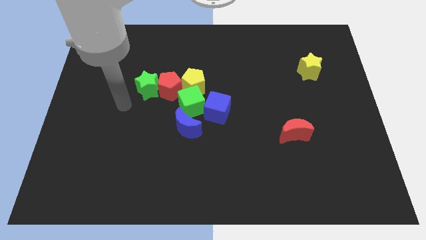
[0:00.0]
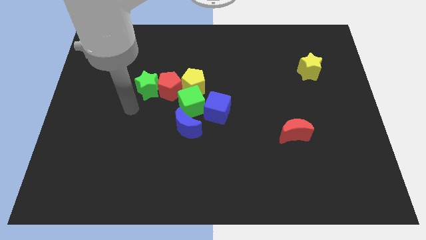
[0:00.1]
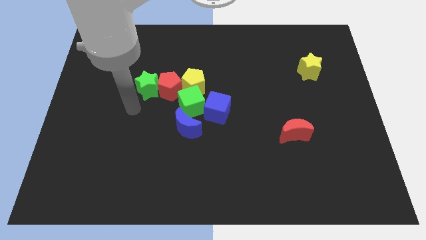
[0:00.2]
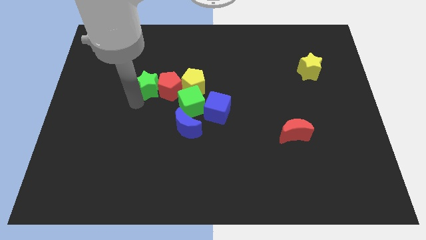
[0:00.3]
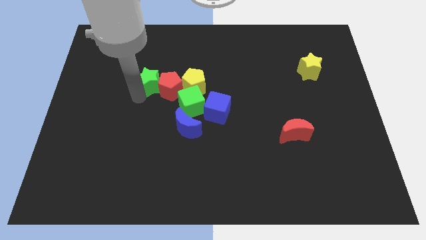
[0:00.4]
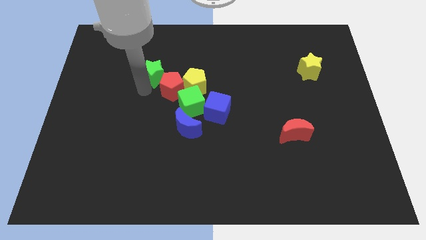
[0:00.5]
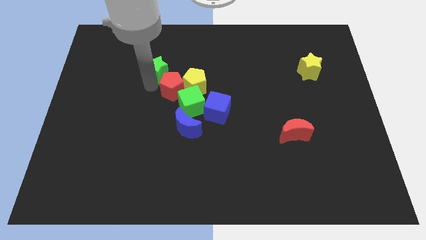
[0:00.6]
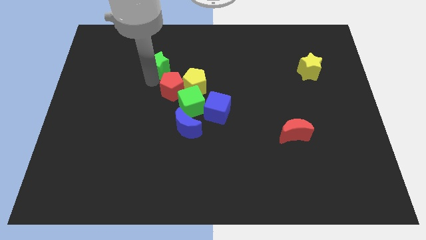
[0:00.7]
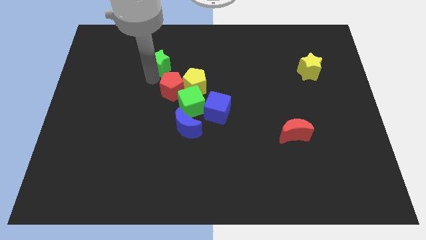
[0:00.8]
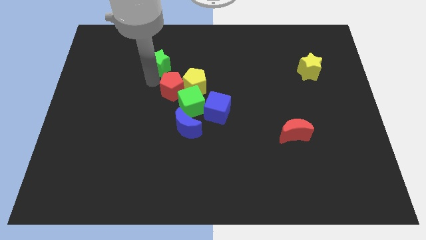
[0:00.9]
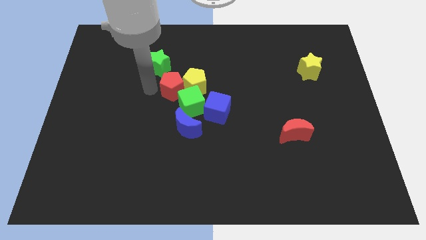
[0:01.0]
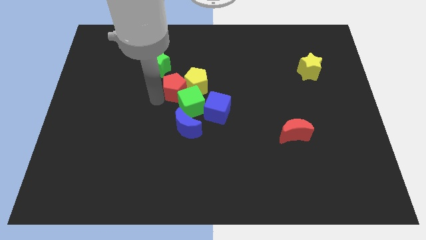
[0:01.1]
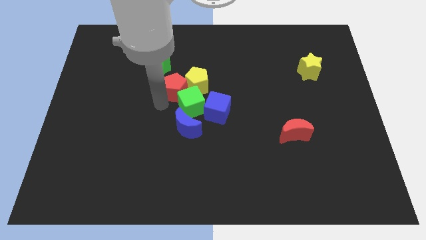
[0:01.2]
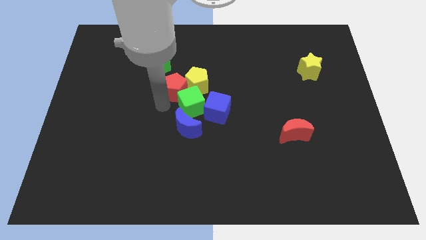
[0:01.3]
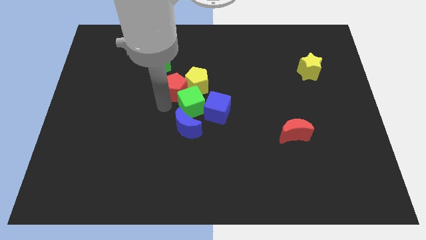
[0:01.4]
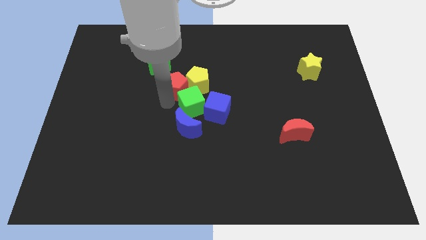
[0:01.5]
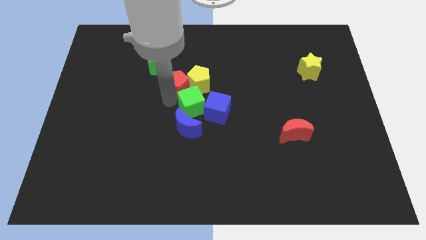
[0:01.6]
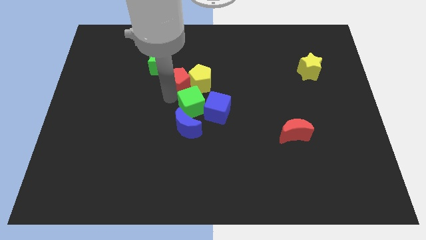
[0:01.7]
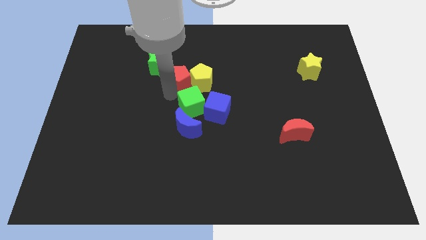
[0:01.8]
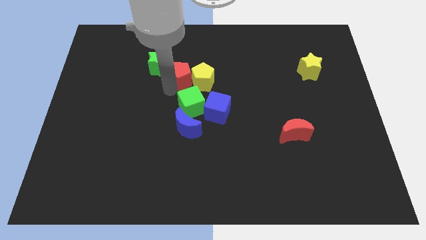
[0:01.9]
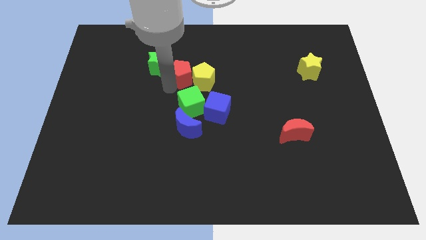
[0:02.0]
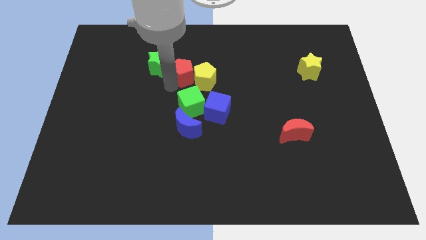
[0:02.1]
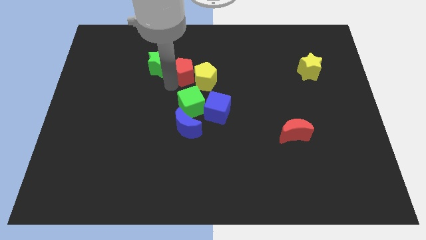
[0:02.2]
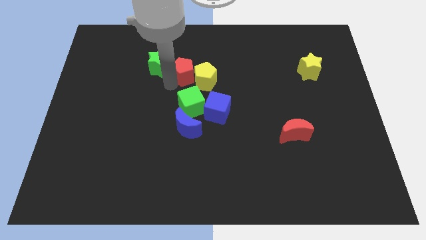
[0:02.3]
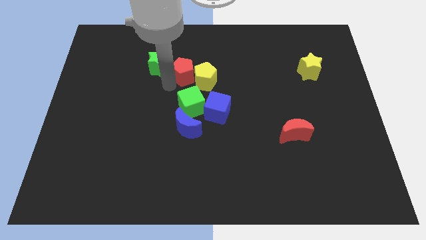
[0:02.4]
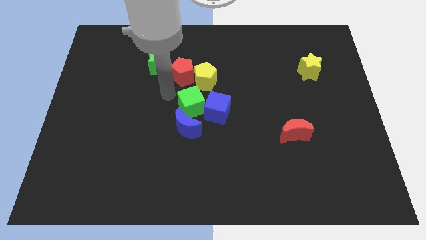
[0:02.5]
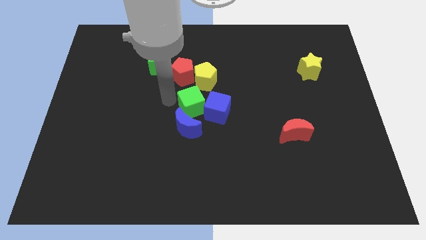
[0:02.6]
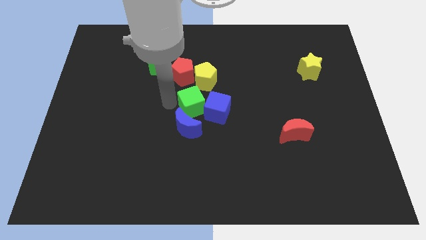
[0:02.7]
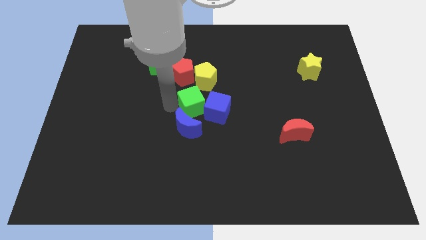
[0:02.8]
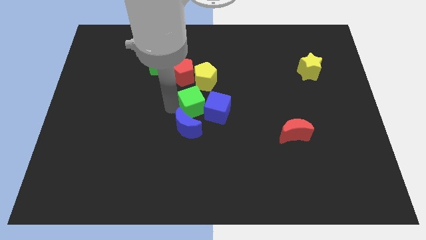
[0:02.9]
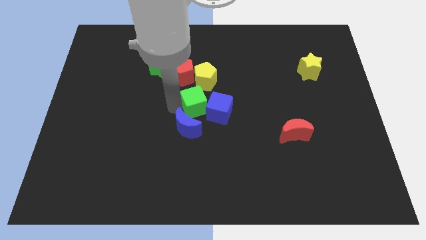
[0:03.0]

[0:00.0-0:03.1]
move the green star and red pentagon up slightly

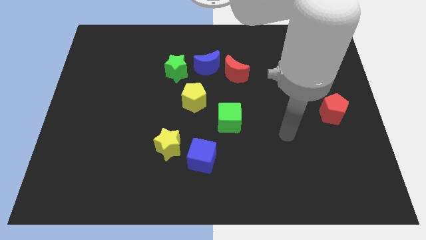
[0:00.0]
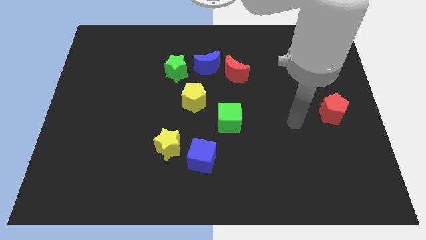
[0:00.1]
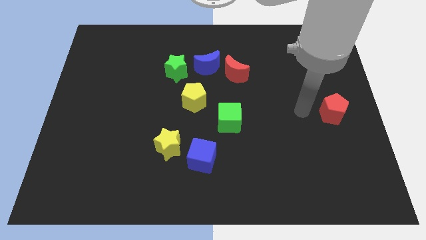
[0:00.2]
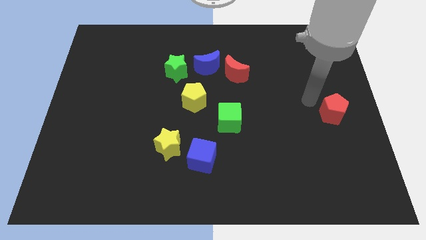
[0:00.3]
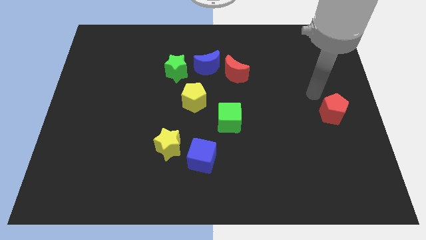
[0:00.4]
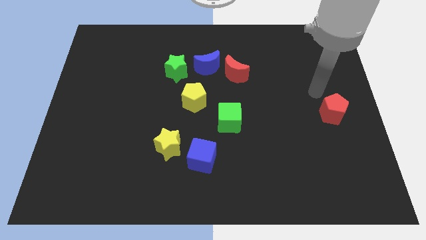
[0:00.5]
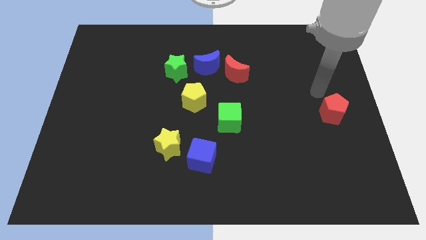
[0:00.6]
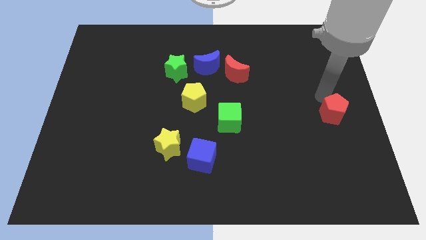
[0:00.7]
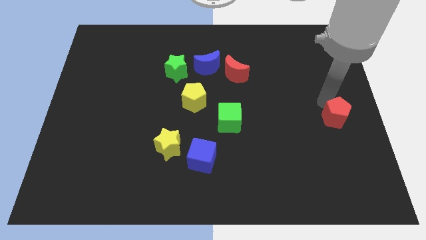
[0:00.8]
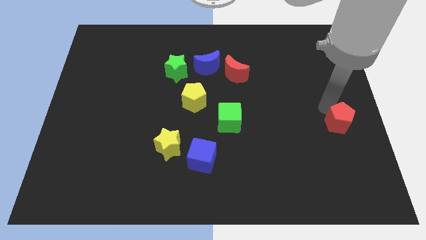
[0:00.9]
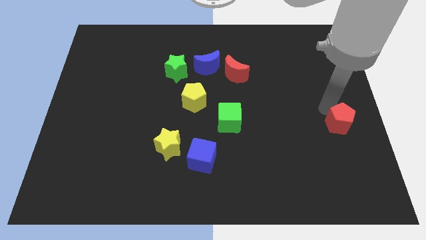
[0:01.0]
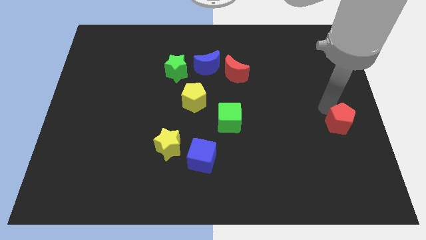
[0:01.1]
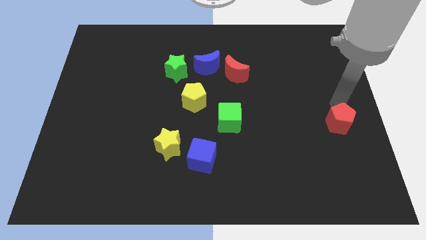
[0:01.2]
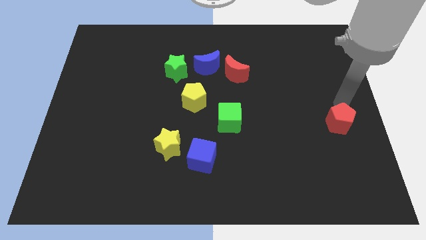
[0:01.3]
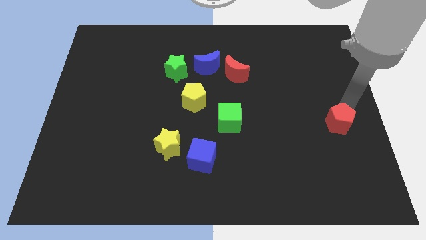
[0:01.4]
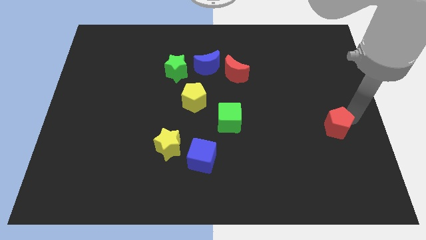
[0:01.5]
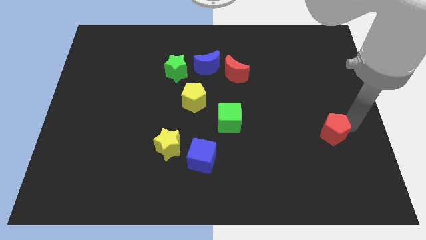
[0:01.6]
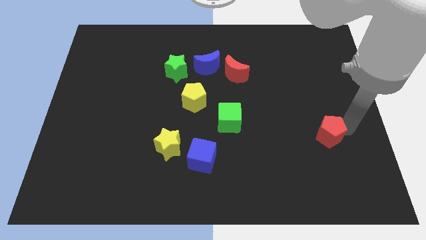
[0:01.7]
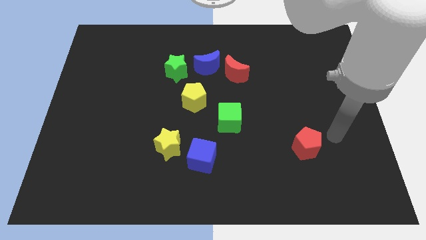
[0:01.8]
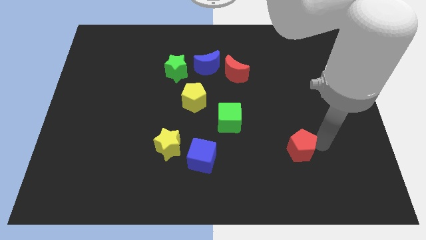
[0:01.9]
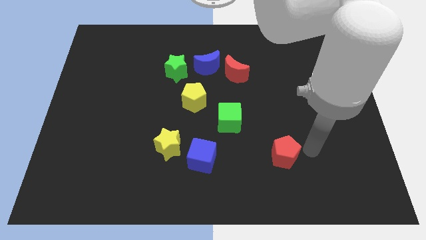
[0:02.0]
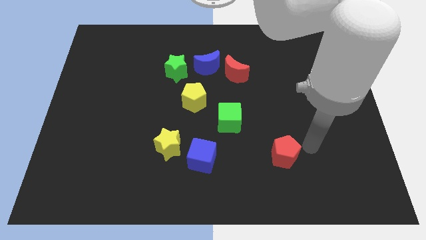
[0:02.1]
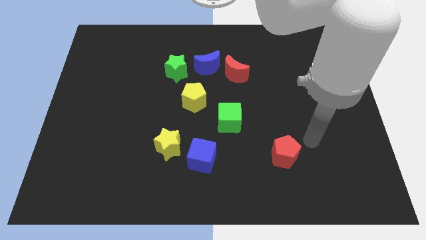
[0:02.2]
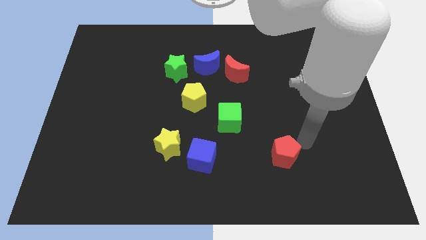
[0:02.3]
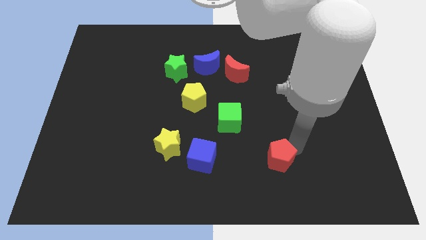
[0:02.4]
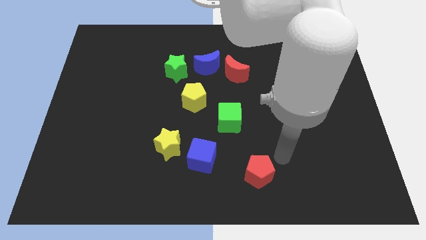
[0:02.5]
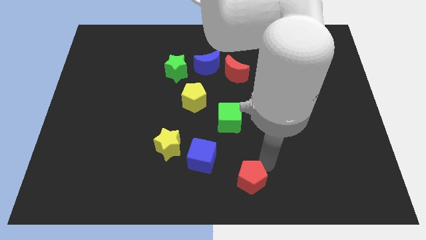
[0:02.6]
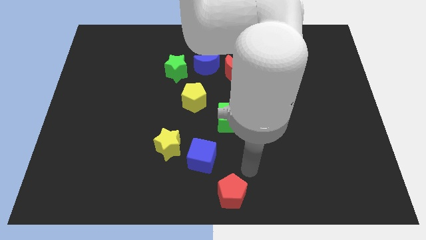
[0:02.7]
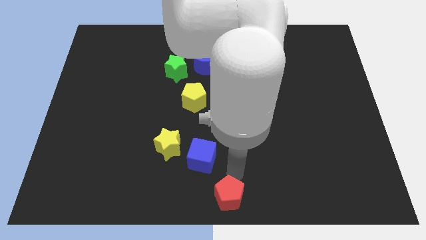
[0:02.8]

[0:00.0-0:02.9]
push the red pentagon to the bottom centre of the board

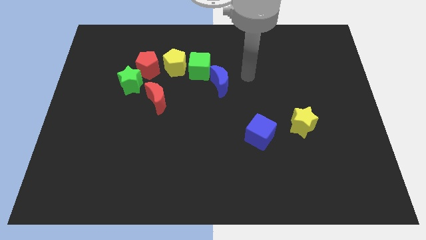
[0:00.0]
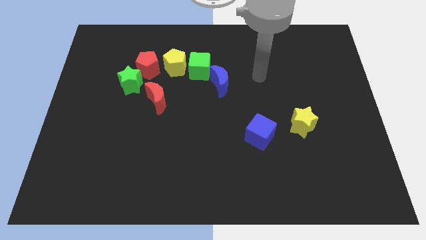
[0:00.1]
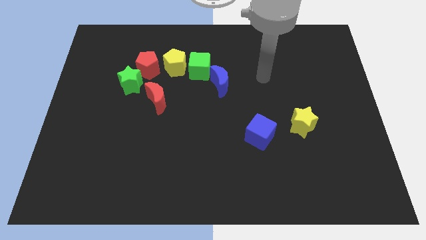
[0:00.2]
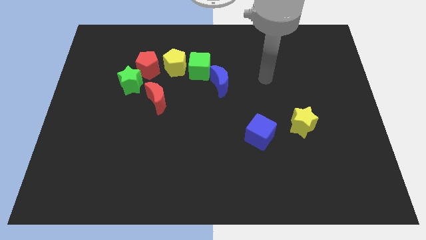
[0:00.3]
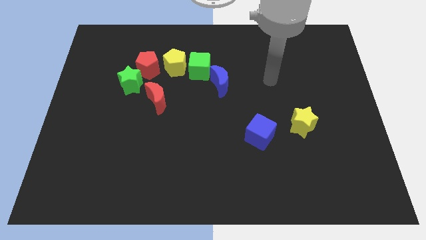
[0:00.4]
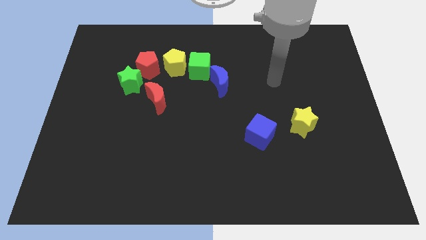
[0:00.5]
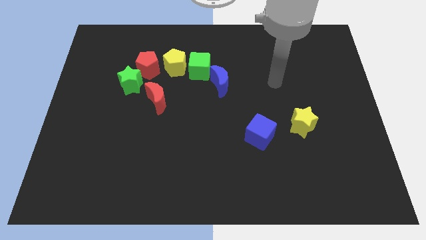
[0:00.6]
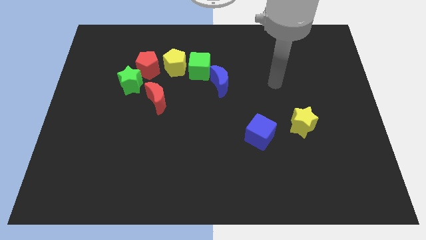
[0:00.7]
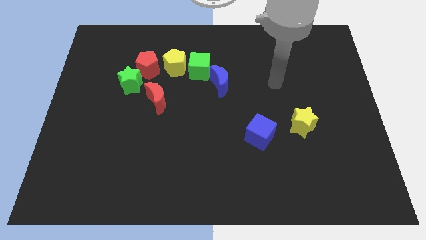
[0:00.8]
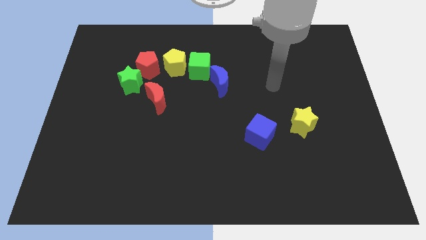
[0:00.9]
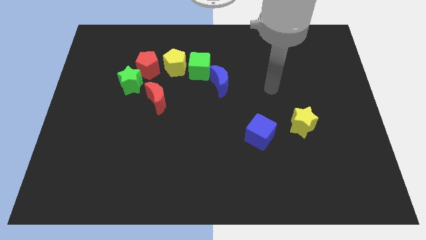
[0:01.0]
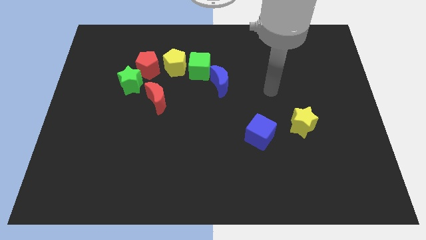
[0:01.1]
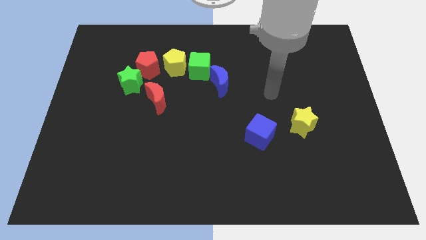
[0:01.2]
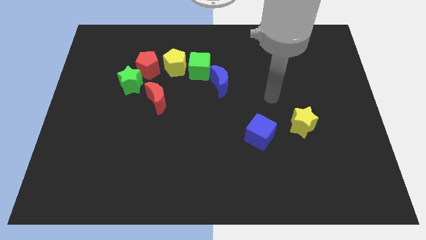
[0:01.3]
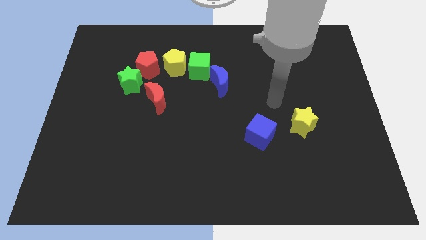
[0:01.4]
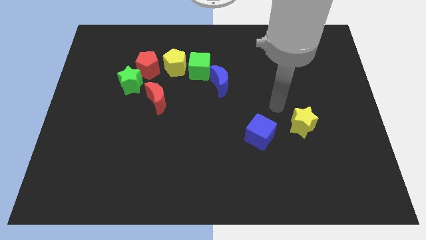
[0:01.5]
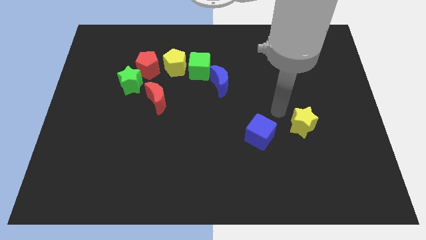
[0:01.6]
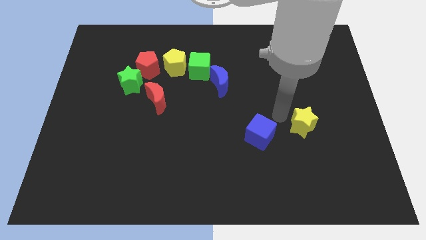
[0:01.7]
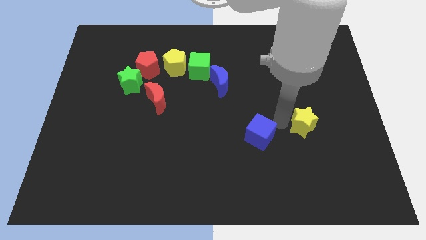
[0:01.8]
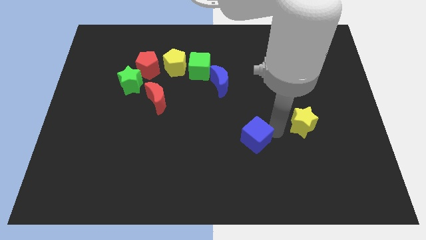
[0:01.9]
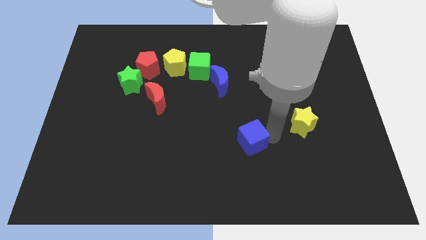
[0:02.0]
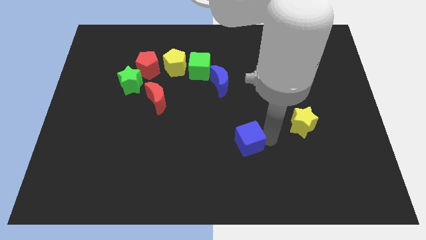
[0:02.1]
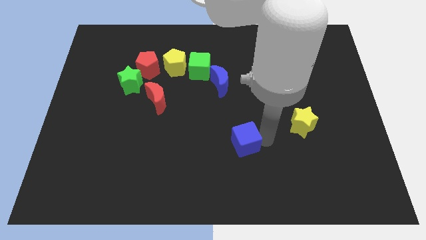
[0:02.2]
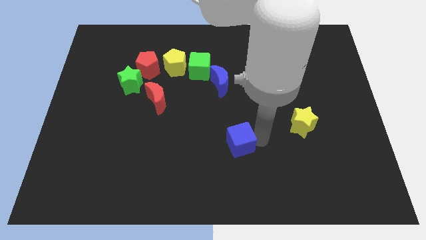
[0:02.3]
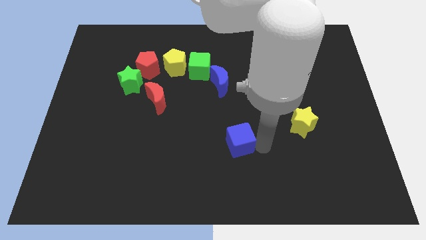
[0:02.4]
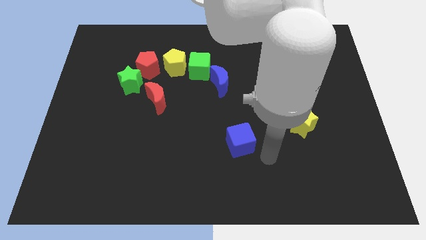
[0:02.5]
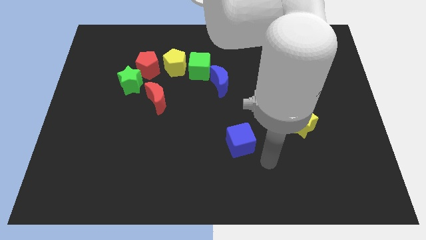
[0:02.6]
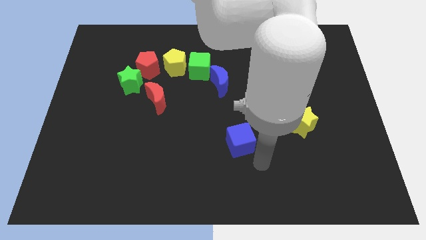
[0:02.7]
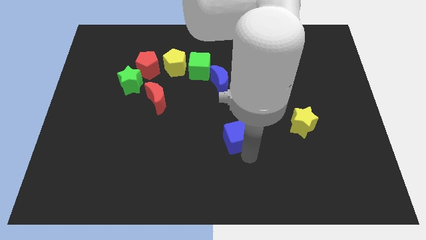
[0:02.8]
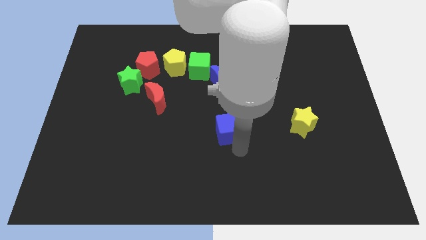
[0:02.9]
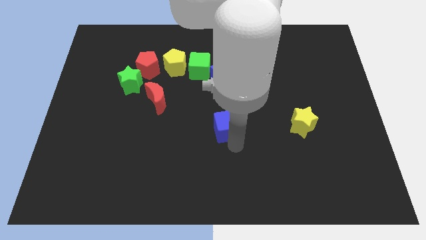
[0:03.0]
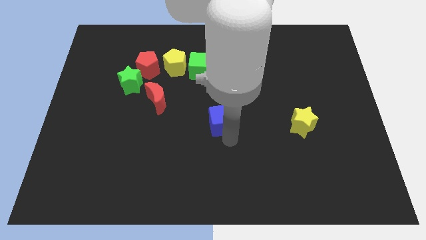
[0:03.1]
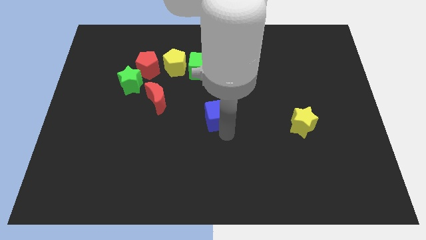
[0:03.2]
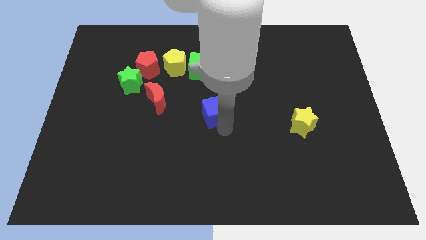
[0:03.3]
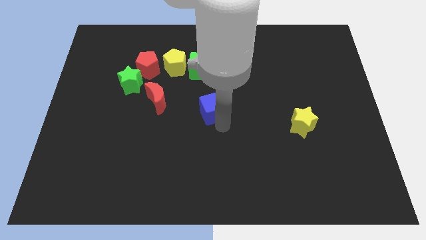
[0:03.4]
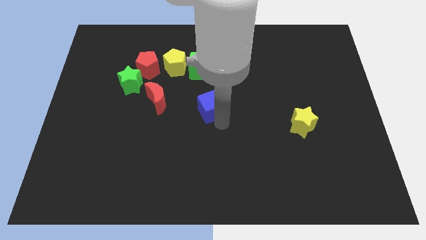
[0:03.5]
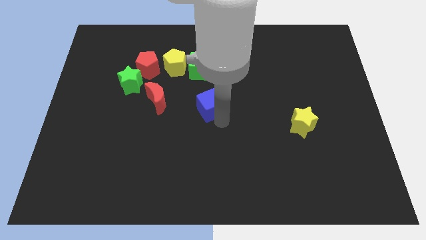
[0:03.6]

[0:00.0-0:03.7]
move the blue cube to the center of the board
